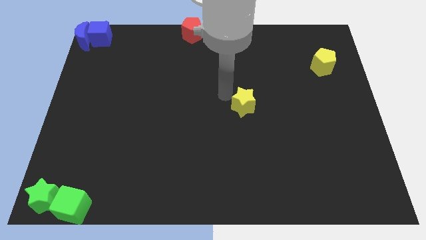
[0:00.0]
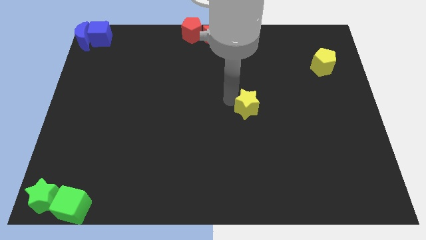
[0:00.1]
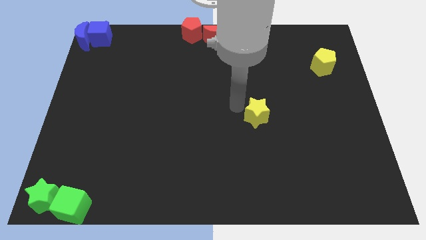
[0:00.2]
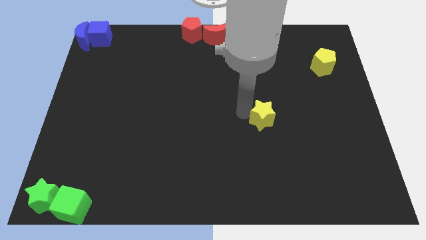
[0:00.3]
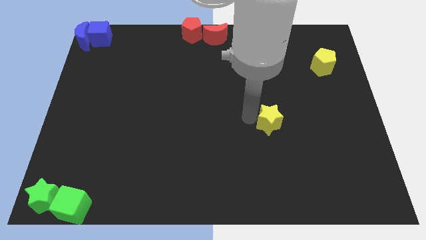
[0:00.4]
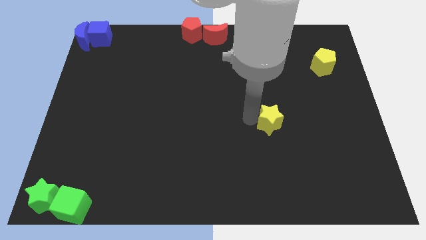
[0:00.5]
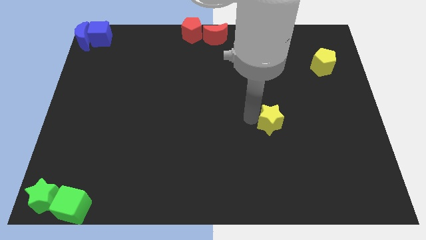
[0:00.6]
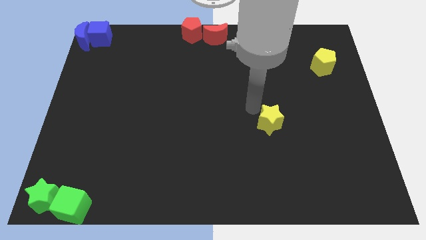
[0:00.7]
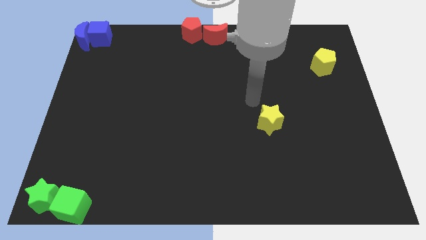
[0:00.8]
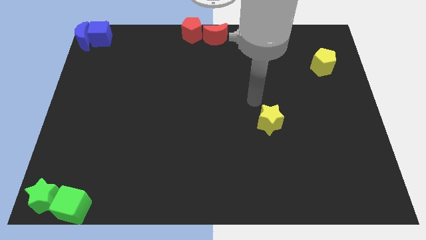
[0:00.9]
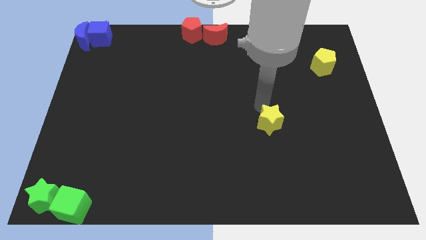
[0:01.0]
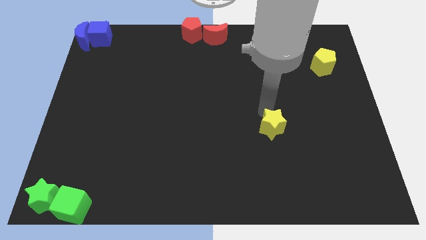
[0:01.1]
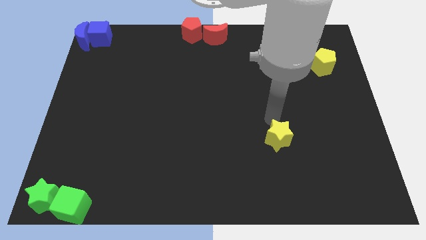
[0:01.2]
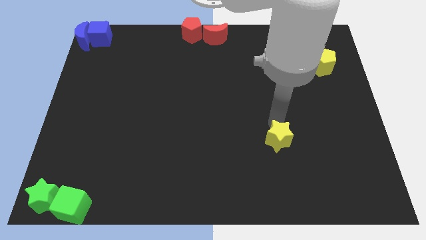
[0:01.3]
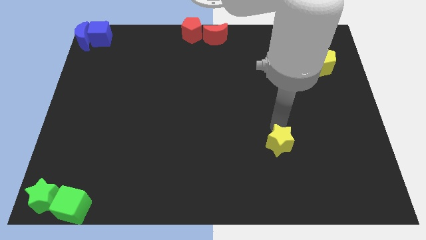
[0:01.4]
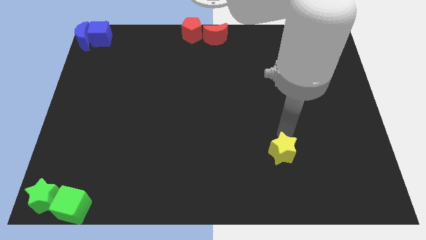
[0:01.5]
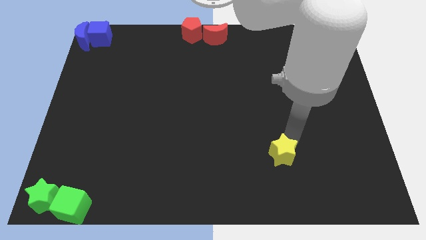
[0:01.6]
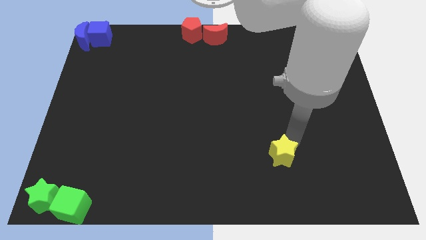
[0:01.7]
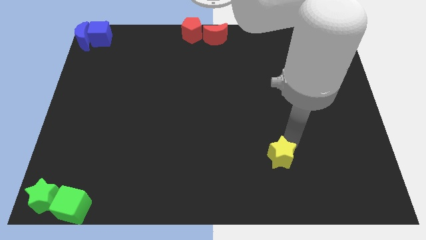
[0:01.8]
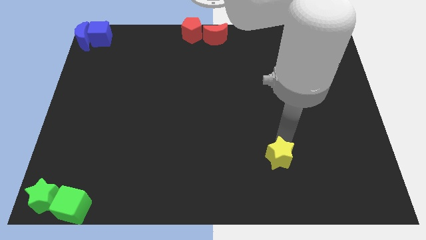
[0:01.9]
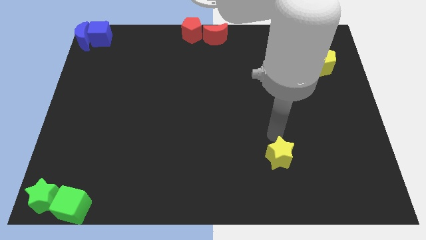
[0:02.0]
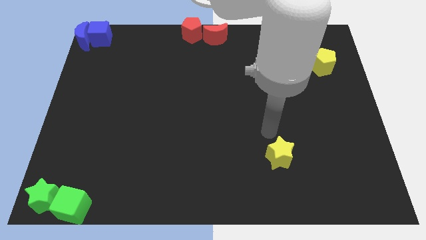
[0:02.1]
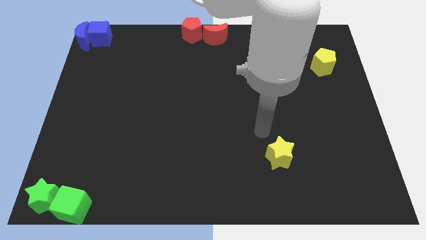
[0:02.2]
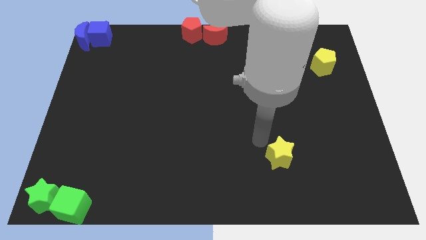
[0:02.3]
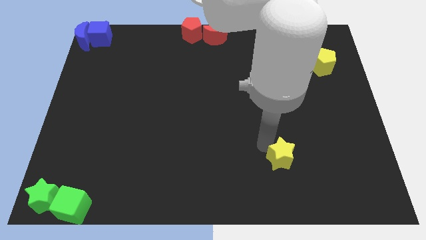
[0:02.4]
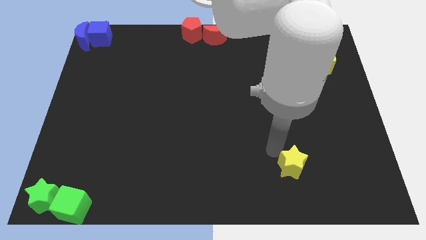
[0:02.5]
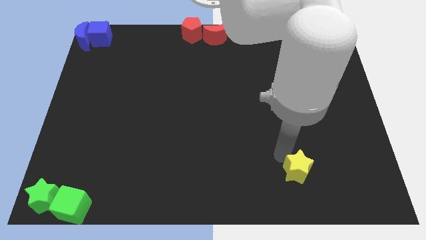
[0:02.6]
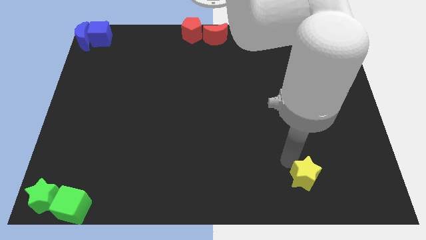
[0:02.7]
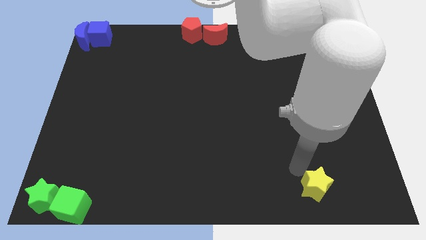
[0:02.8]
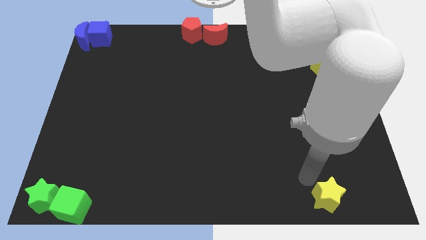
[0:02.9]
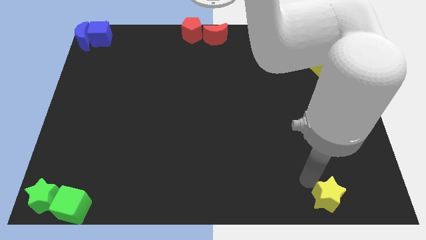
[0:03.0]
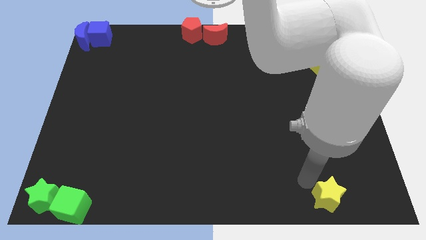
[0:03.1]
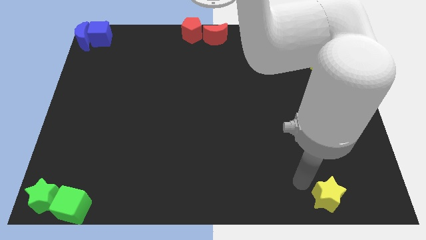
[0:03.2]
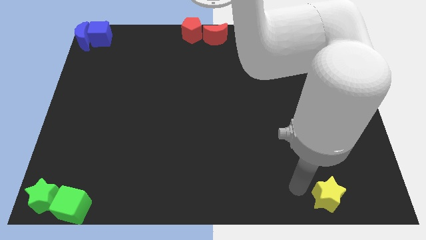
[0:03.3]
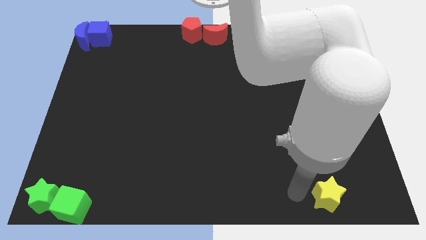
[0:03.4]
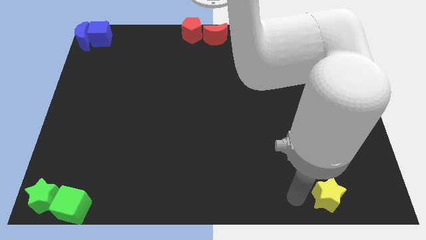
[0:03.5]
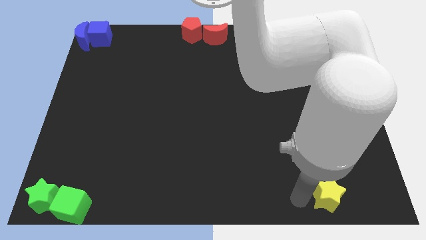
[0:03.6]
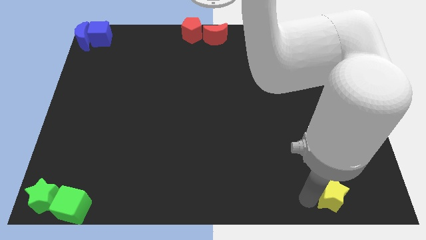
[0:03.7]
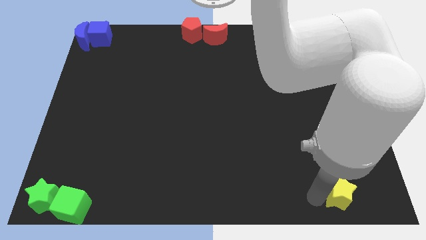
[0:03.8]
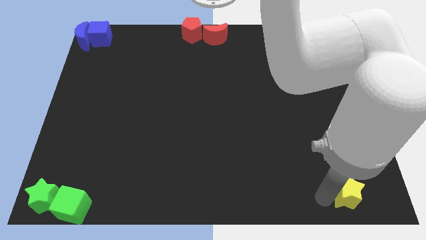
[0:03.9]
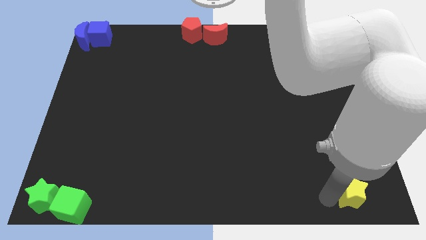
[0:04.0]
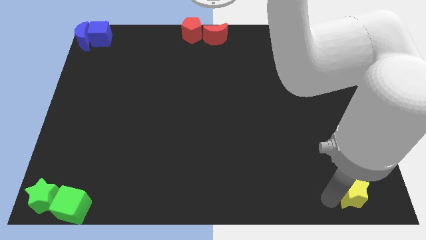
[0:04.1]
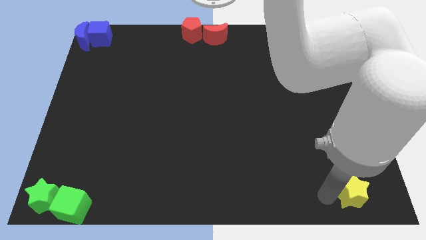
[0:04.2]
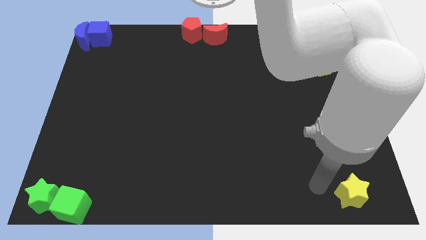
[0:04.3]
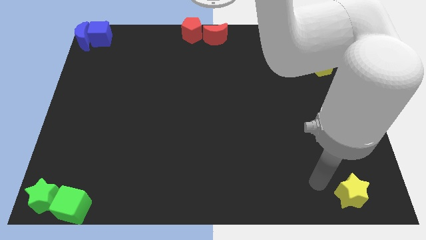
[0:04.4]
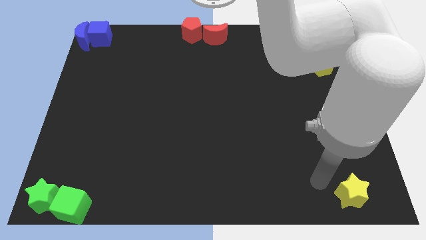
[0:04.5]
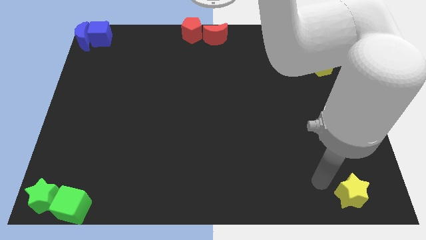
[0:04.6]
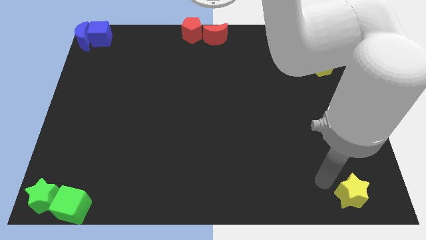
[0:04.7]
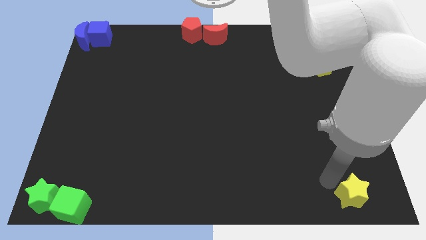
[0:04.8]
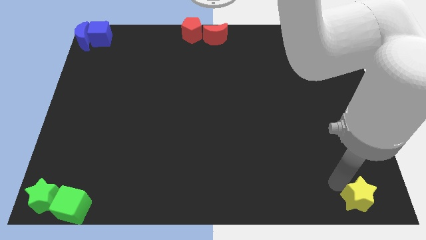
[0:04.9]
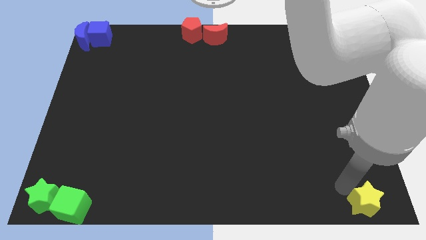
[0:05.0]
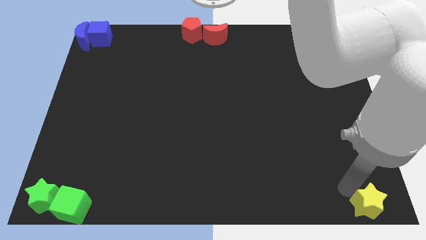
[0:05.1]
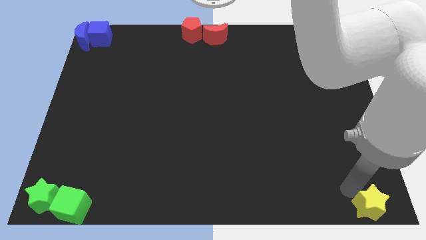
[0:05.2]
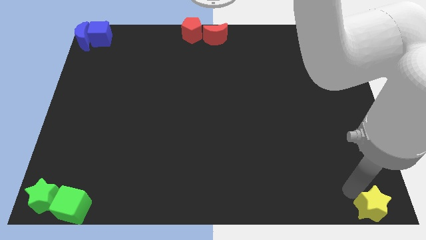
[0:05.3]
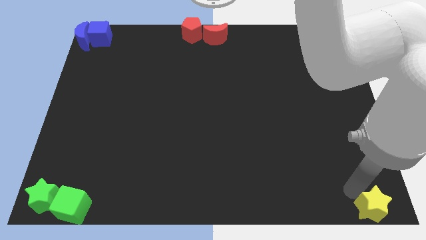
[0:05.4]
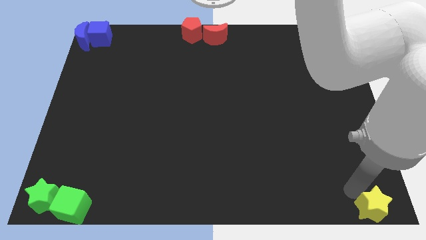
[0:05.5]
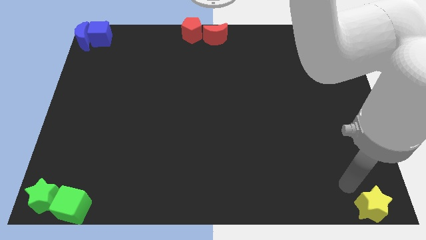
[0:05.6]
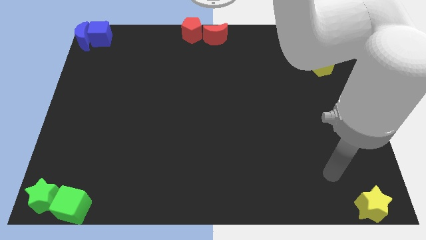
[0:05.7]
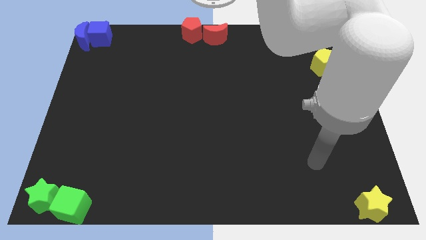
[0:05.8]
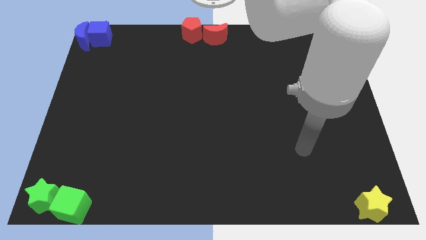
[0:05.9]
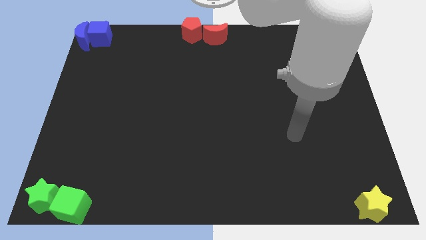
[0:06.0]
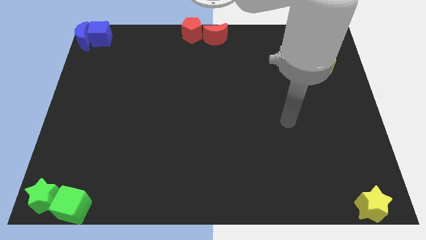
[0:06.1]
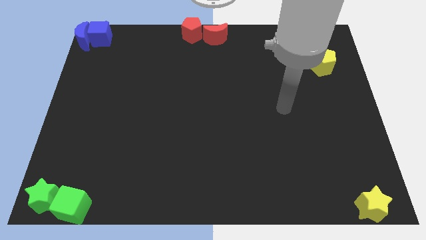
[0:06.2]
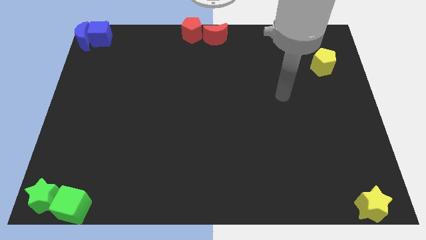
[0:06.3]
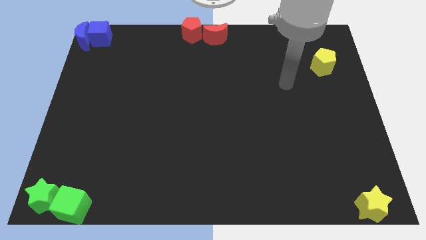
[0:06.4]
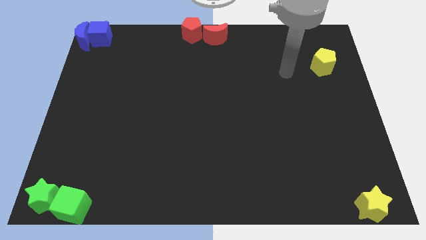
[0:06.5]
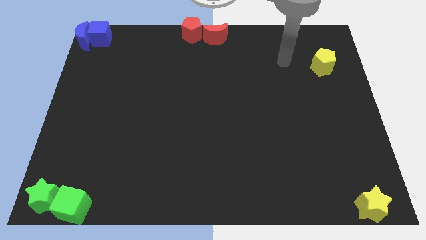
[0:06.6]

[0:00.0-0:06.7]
move the yellow star to the bottom right corner

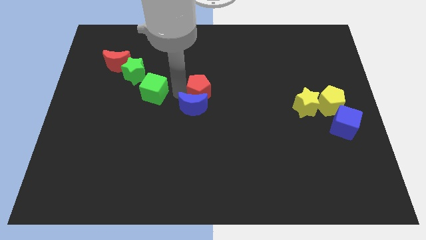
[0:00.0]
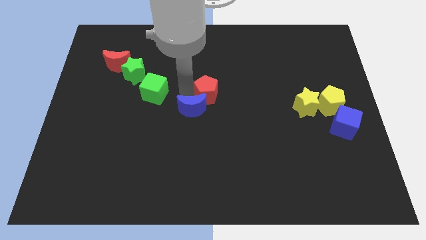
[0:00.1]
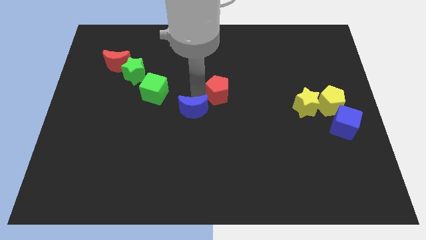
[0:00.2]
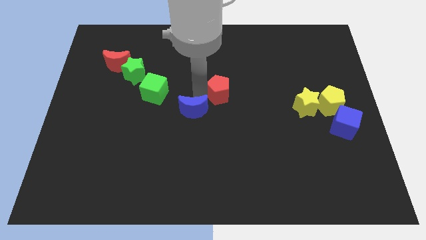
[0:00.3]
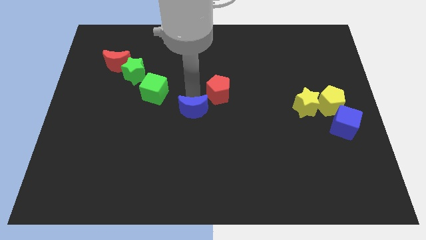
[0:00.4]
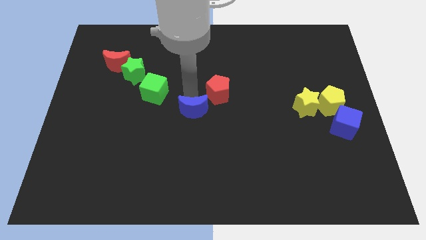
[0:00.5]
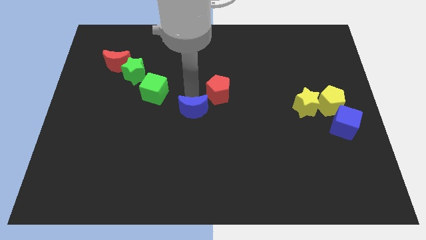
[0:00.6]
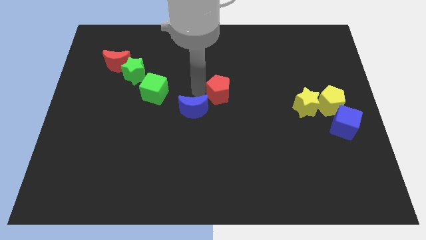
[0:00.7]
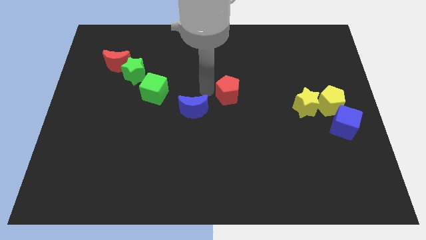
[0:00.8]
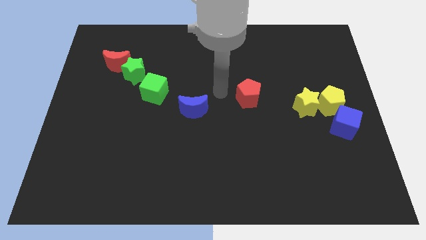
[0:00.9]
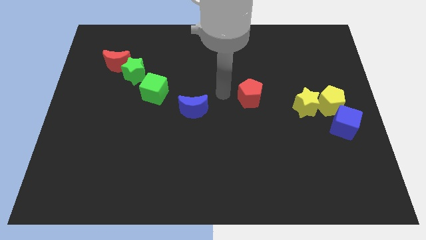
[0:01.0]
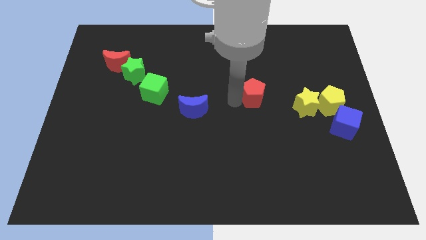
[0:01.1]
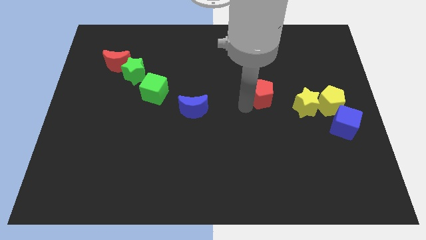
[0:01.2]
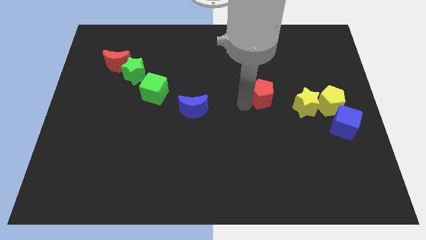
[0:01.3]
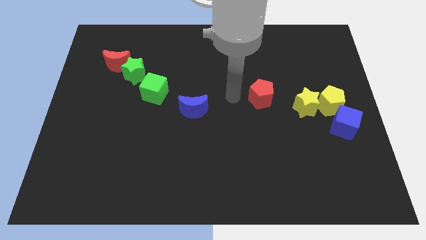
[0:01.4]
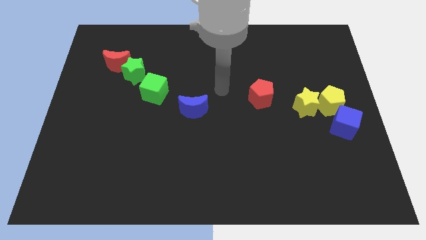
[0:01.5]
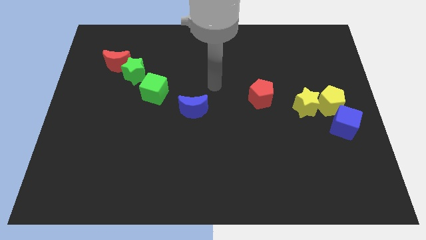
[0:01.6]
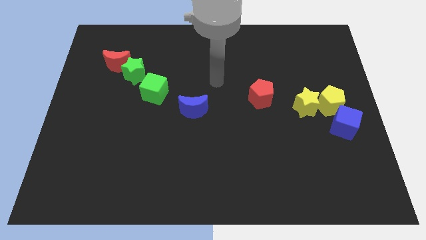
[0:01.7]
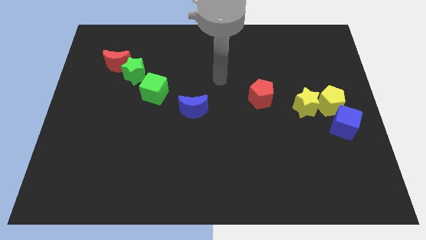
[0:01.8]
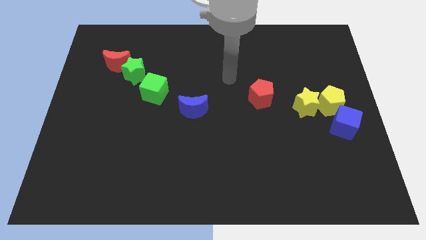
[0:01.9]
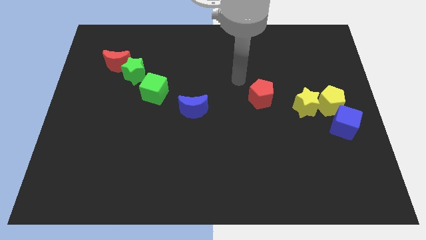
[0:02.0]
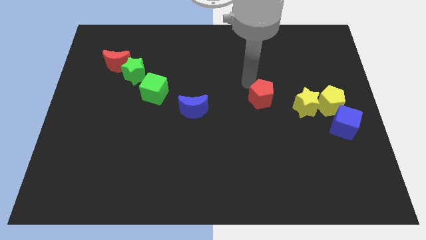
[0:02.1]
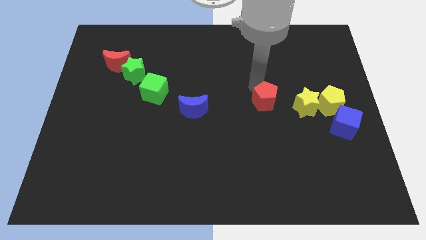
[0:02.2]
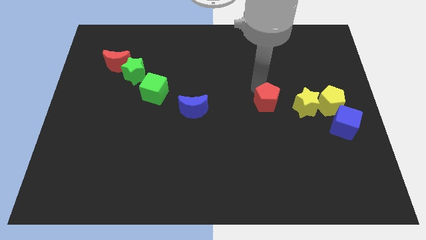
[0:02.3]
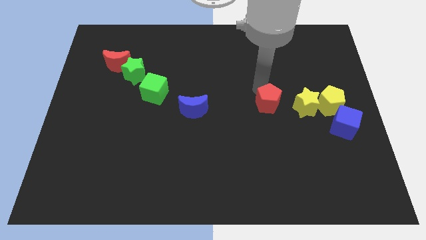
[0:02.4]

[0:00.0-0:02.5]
separate the red pentagon from the blue moon
